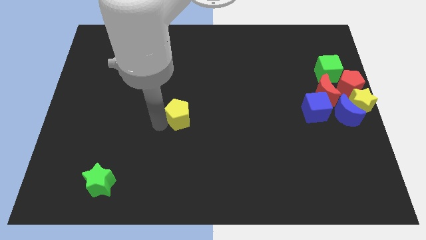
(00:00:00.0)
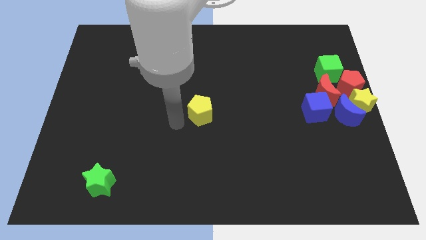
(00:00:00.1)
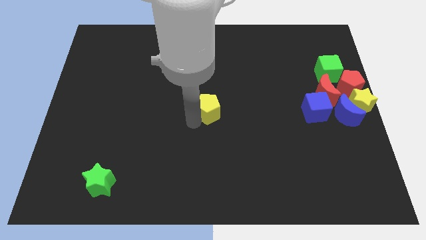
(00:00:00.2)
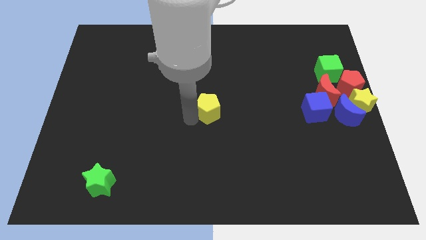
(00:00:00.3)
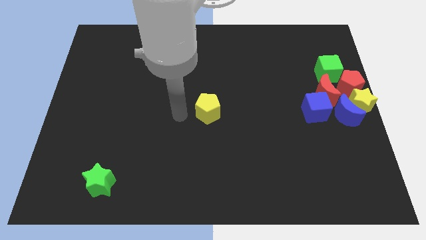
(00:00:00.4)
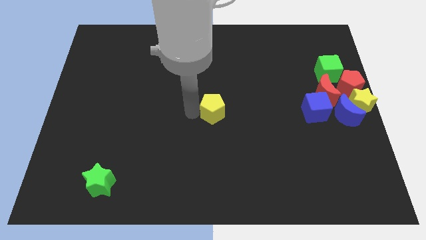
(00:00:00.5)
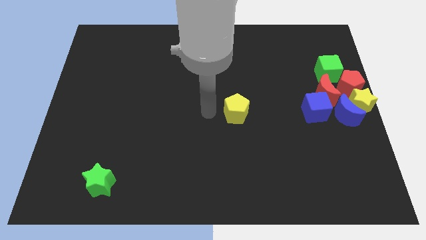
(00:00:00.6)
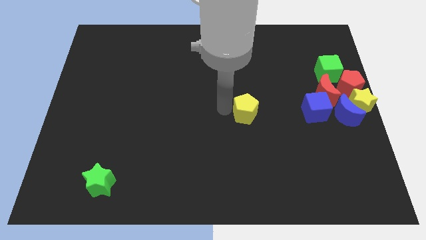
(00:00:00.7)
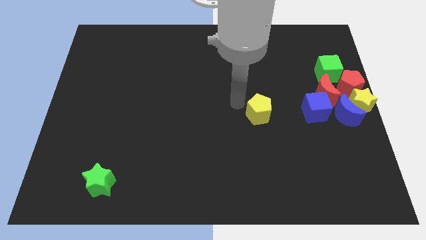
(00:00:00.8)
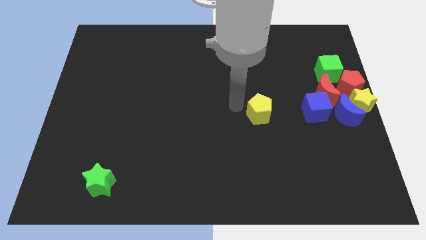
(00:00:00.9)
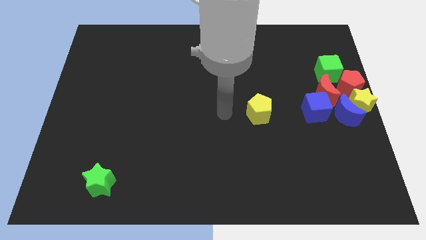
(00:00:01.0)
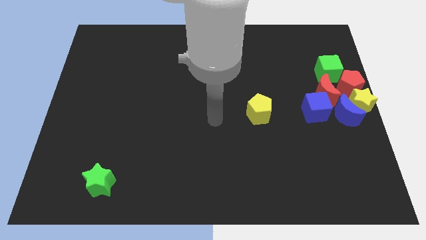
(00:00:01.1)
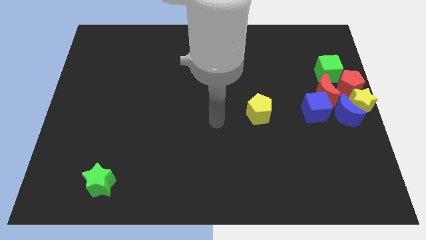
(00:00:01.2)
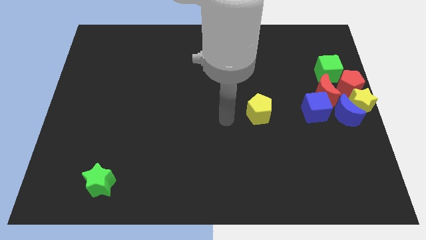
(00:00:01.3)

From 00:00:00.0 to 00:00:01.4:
move yellow pentagon left beside the blue cube

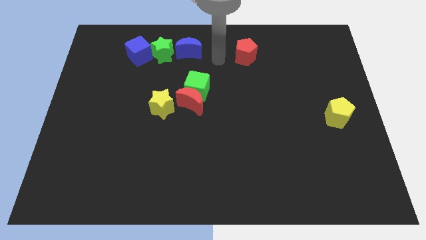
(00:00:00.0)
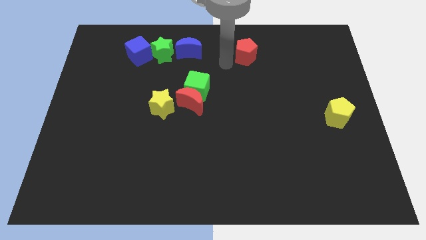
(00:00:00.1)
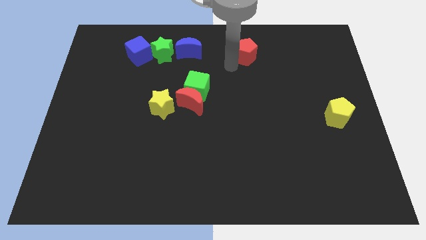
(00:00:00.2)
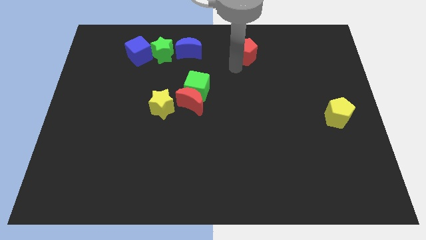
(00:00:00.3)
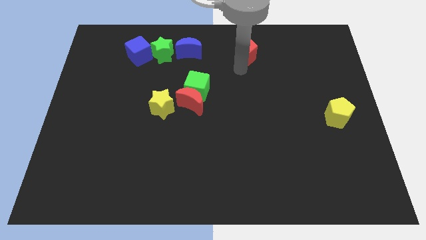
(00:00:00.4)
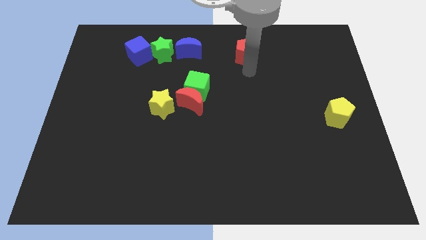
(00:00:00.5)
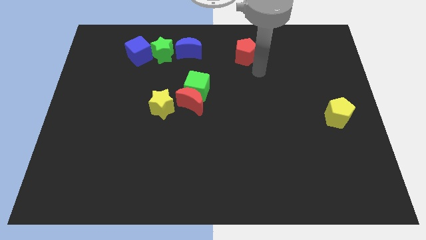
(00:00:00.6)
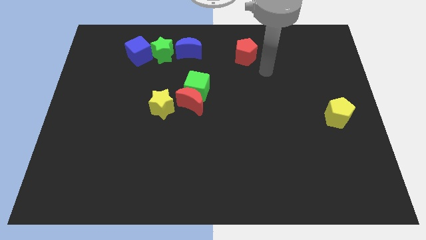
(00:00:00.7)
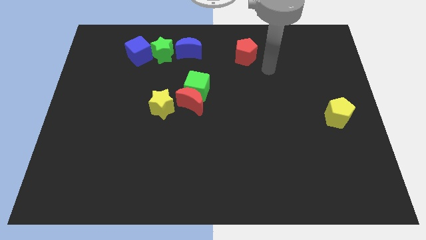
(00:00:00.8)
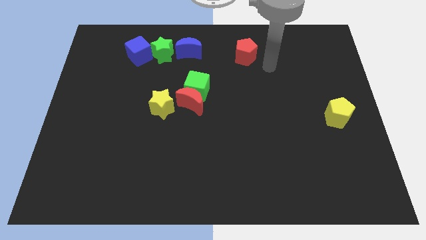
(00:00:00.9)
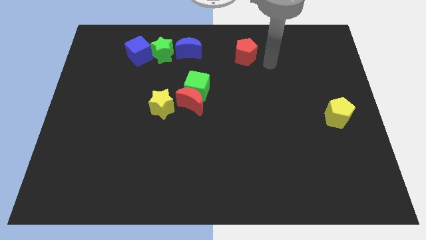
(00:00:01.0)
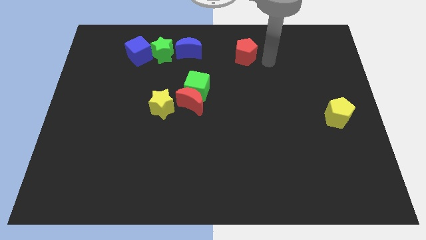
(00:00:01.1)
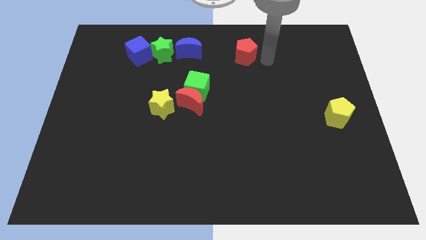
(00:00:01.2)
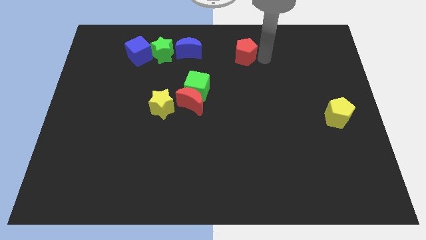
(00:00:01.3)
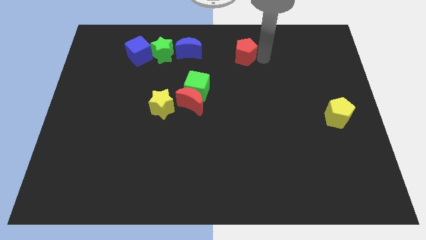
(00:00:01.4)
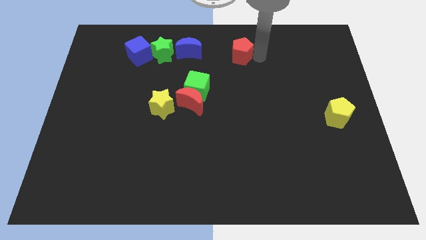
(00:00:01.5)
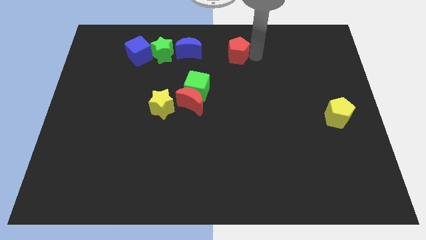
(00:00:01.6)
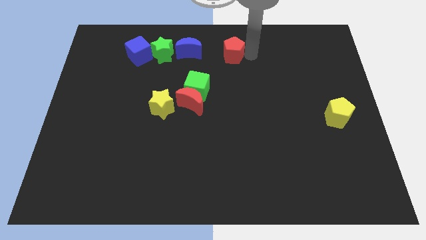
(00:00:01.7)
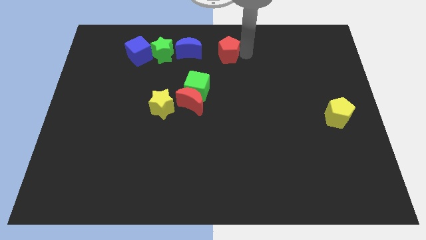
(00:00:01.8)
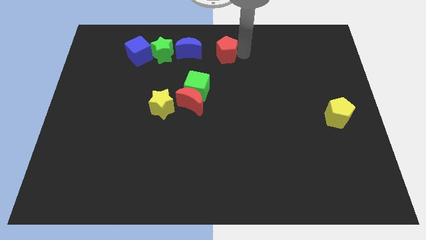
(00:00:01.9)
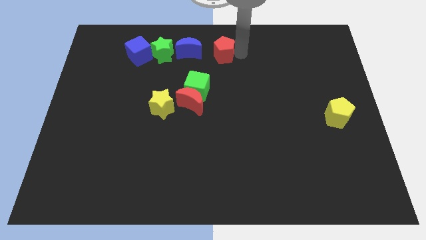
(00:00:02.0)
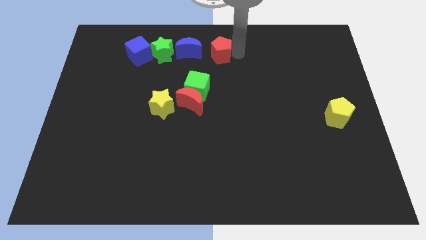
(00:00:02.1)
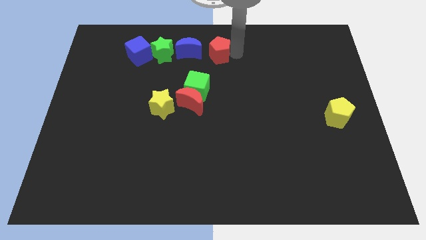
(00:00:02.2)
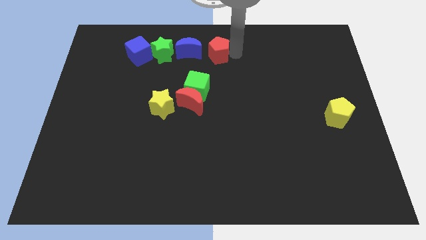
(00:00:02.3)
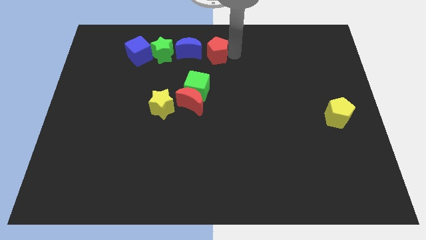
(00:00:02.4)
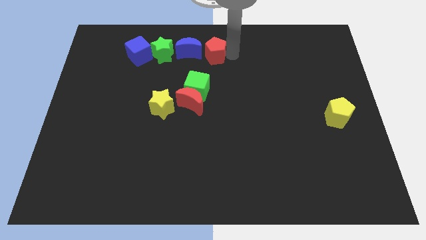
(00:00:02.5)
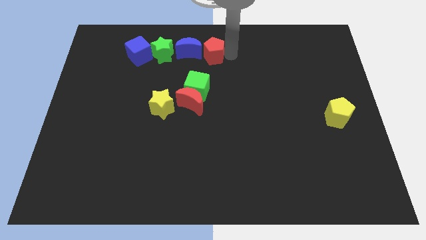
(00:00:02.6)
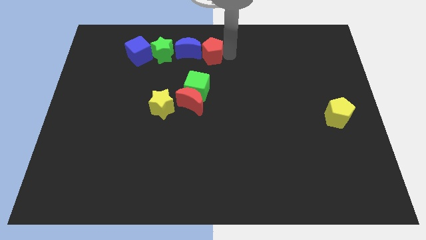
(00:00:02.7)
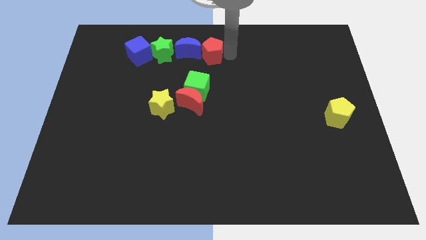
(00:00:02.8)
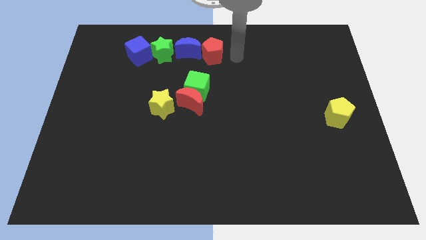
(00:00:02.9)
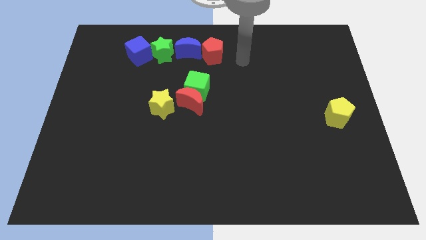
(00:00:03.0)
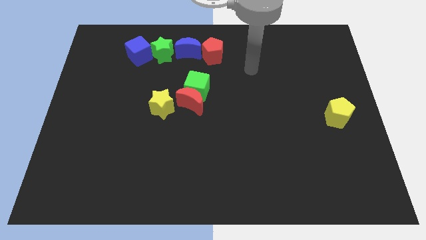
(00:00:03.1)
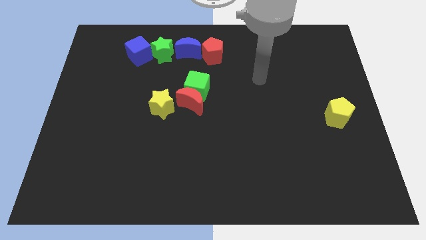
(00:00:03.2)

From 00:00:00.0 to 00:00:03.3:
move red pentagon right to the blue moon

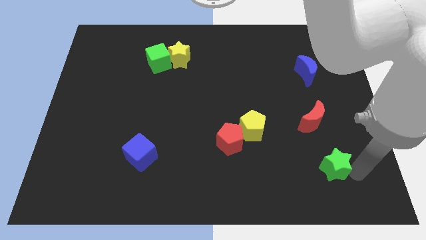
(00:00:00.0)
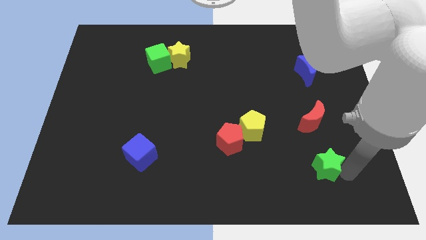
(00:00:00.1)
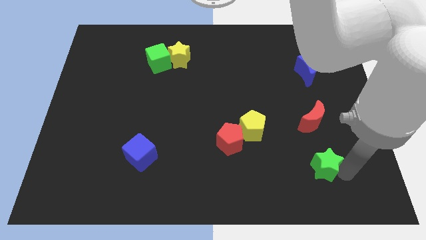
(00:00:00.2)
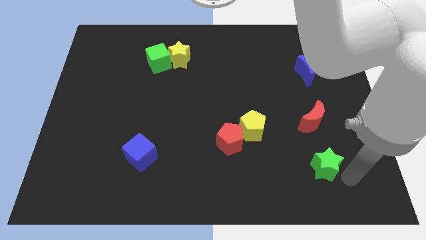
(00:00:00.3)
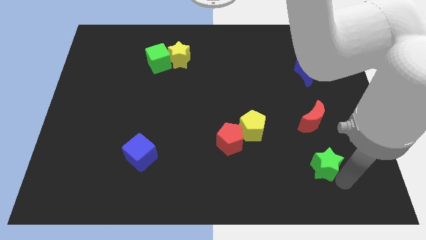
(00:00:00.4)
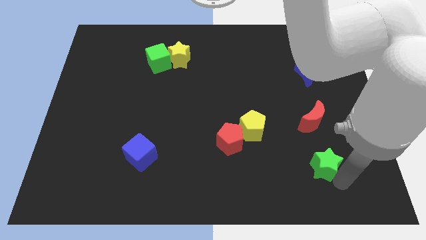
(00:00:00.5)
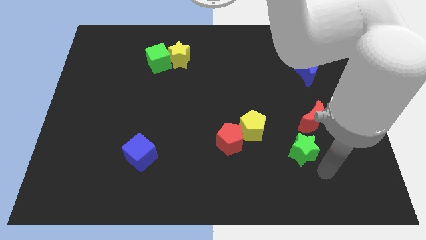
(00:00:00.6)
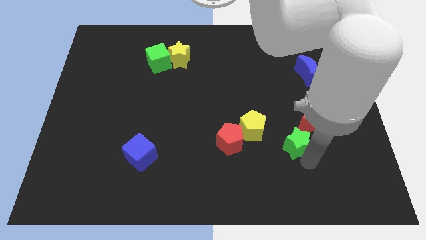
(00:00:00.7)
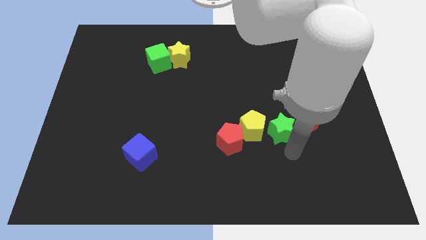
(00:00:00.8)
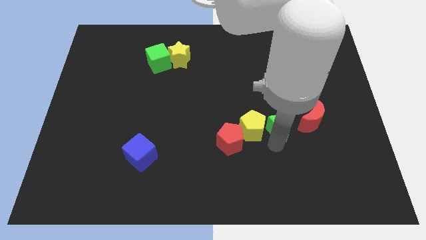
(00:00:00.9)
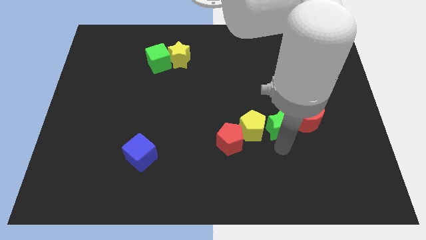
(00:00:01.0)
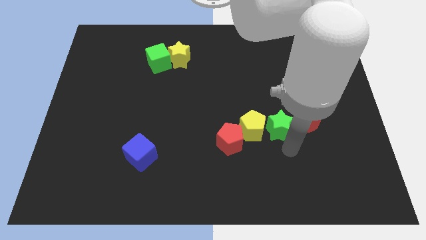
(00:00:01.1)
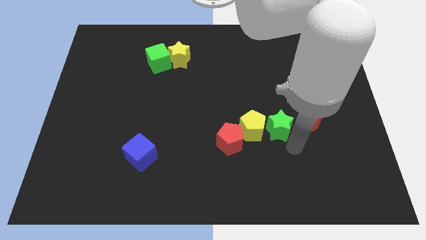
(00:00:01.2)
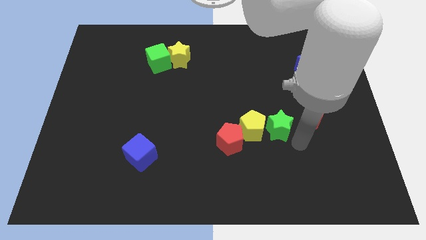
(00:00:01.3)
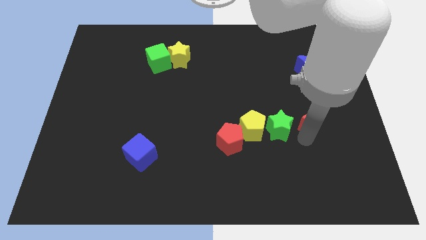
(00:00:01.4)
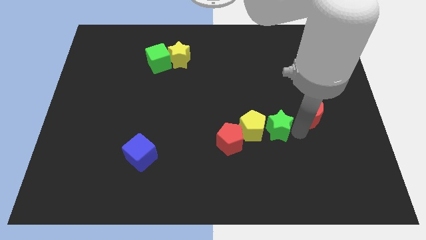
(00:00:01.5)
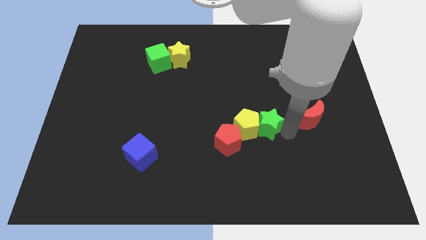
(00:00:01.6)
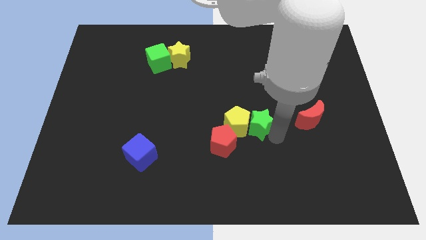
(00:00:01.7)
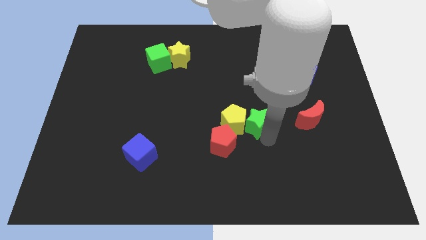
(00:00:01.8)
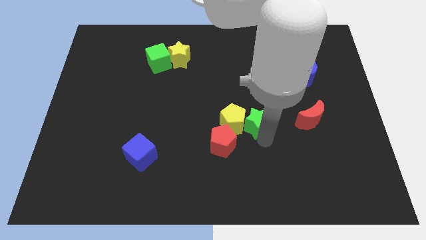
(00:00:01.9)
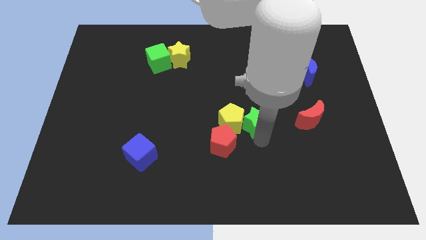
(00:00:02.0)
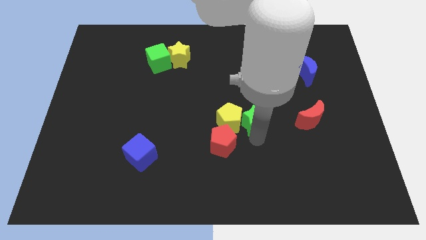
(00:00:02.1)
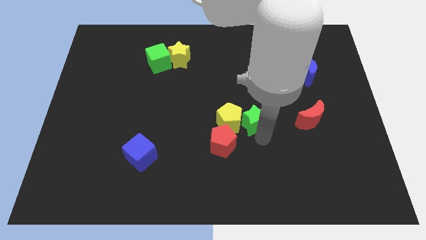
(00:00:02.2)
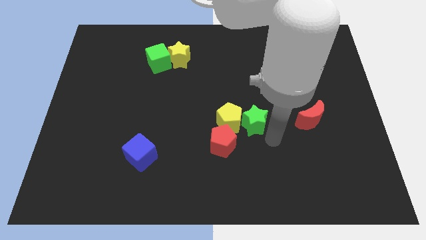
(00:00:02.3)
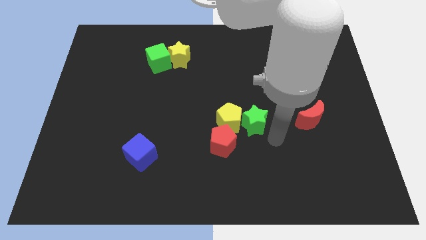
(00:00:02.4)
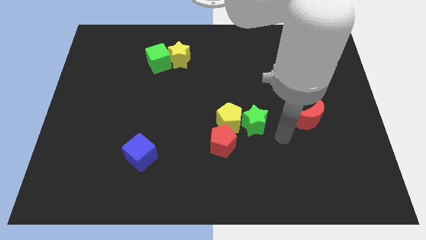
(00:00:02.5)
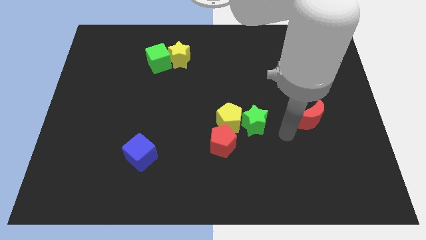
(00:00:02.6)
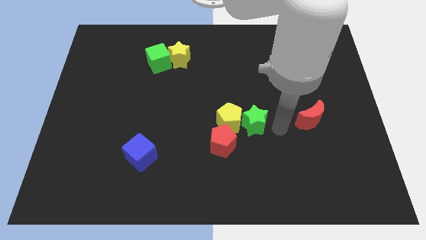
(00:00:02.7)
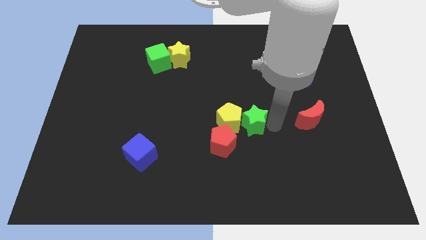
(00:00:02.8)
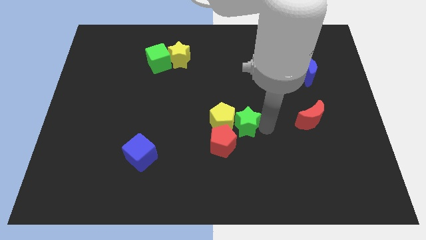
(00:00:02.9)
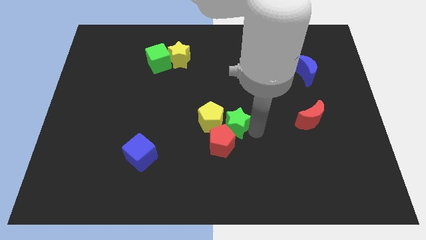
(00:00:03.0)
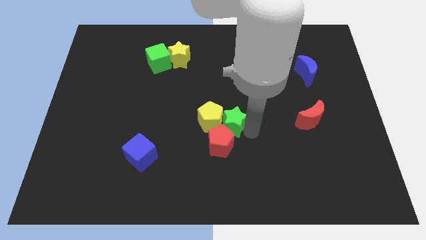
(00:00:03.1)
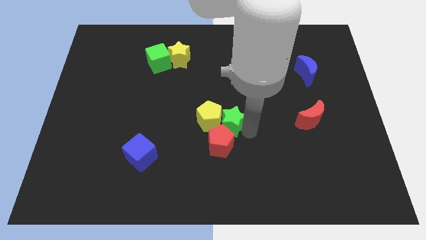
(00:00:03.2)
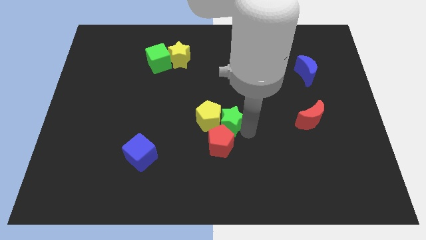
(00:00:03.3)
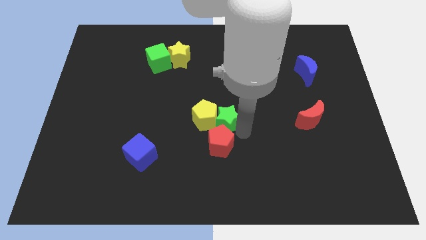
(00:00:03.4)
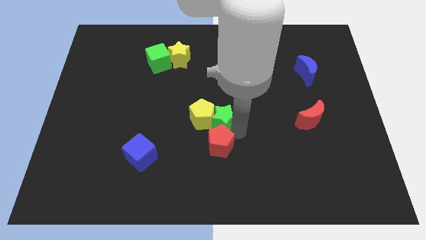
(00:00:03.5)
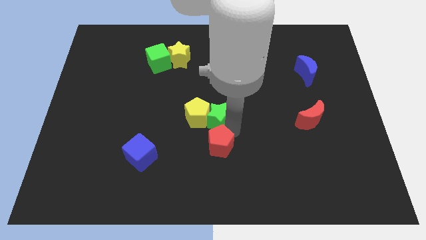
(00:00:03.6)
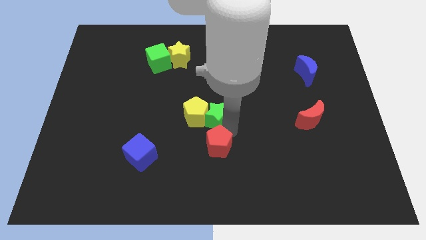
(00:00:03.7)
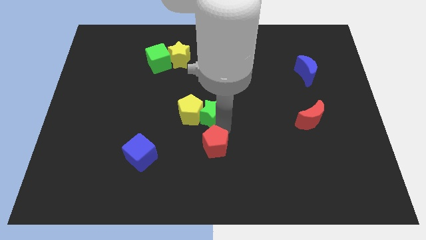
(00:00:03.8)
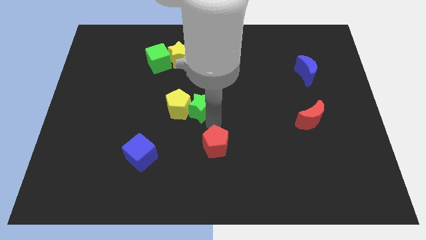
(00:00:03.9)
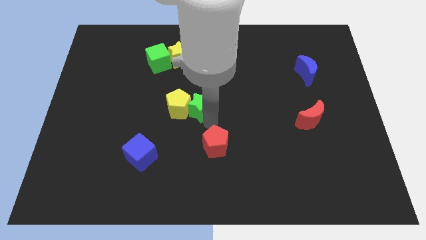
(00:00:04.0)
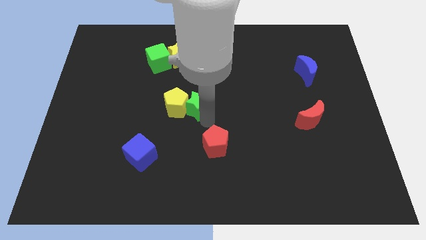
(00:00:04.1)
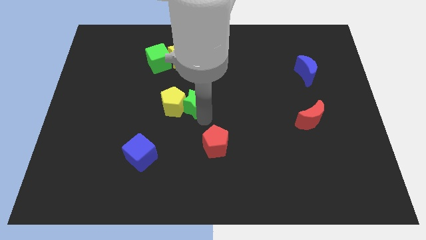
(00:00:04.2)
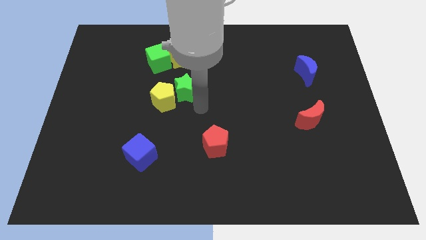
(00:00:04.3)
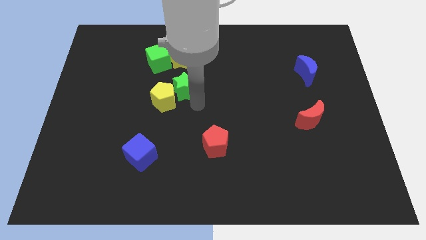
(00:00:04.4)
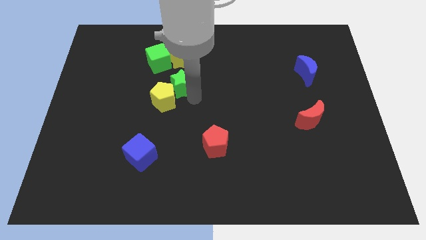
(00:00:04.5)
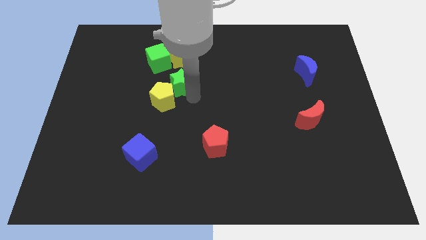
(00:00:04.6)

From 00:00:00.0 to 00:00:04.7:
move the green star below the yellow star
